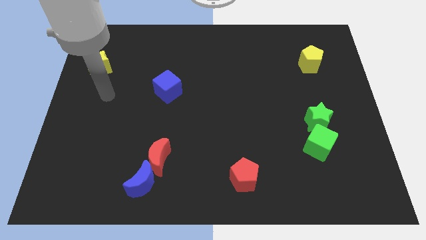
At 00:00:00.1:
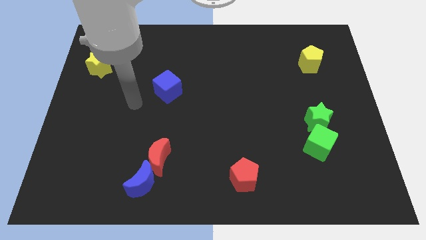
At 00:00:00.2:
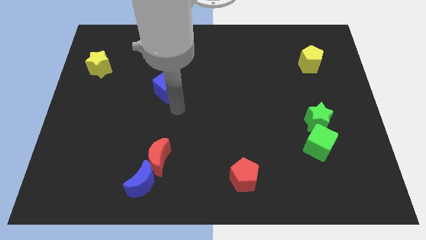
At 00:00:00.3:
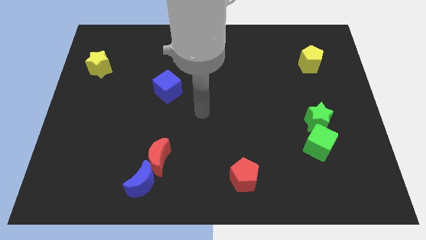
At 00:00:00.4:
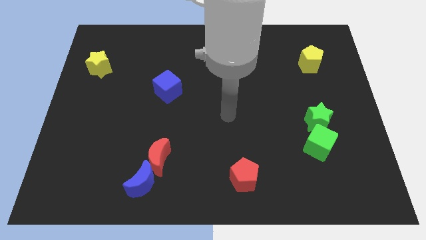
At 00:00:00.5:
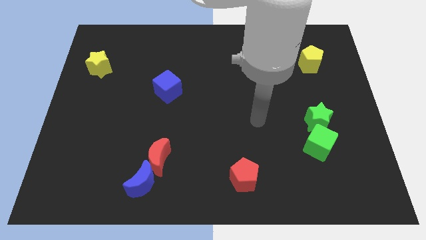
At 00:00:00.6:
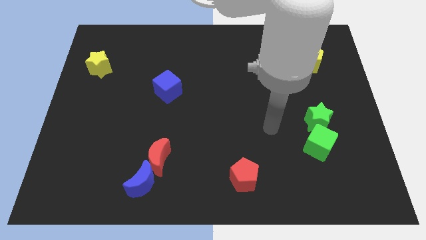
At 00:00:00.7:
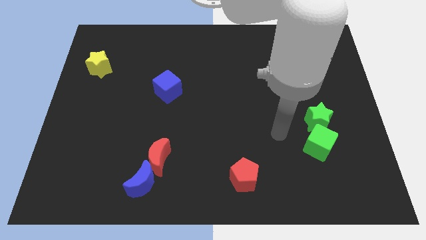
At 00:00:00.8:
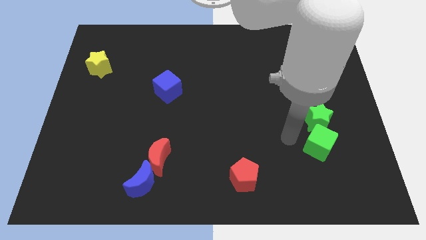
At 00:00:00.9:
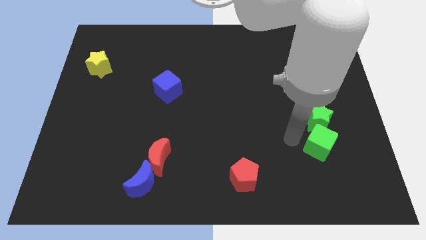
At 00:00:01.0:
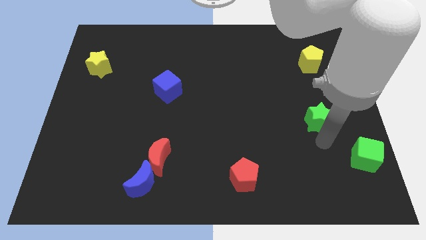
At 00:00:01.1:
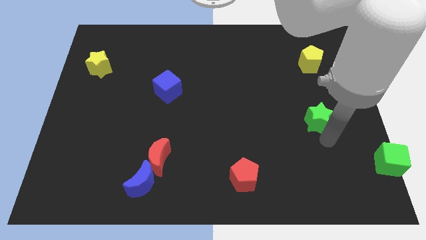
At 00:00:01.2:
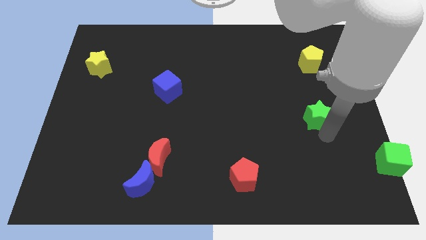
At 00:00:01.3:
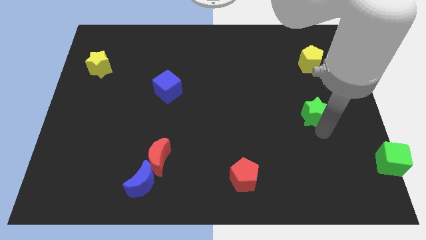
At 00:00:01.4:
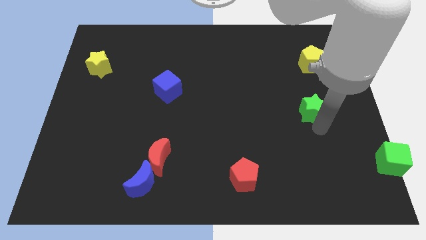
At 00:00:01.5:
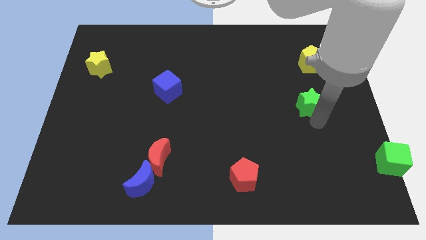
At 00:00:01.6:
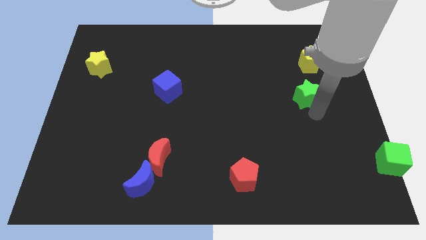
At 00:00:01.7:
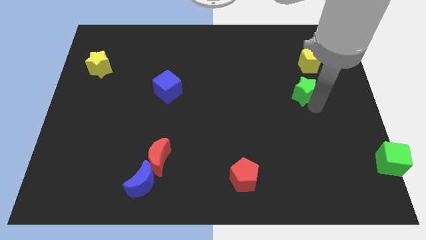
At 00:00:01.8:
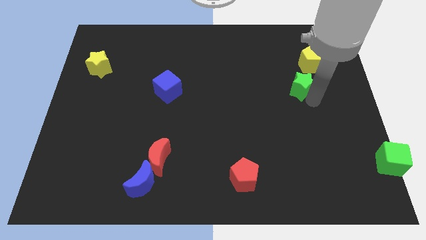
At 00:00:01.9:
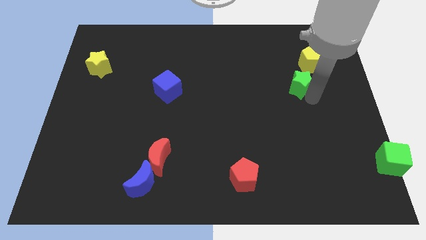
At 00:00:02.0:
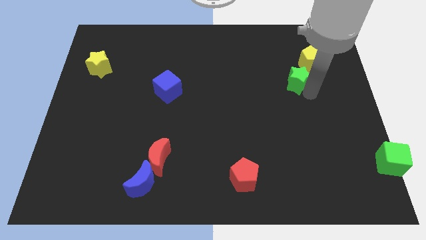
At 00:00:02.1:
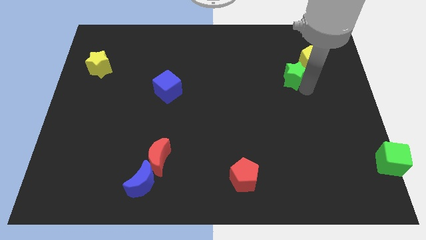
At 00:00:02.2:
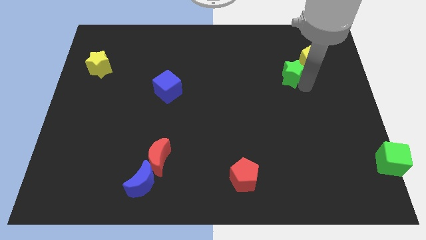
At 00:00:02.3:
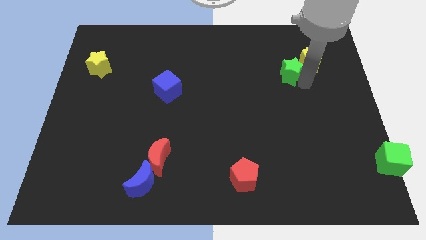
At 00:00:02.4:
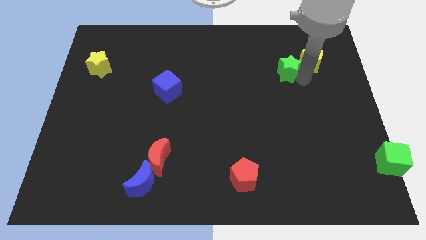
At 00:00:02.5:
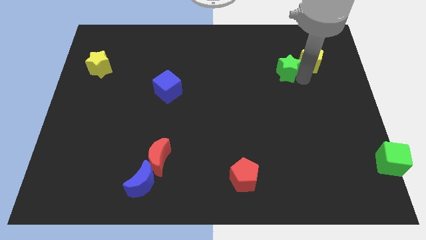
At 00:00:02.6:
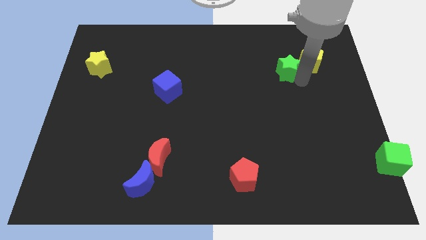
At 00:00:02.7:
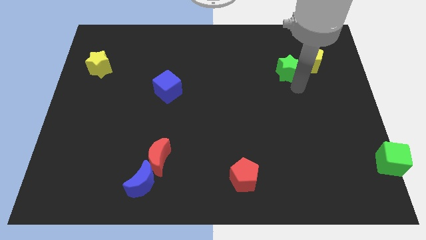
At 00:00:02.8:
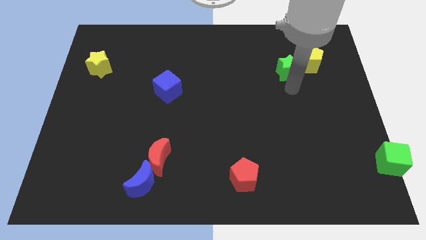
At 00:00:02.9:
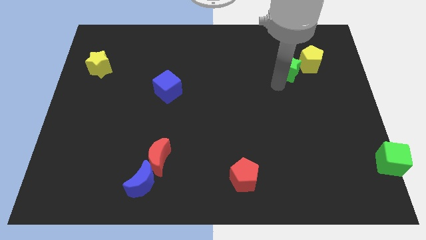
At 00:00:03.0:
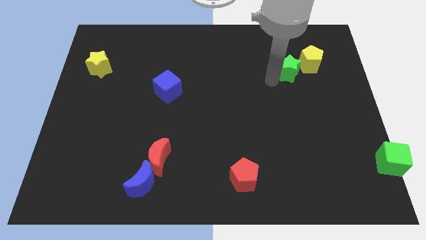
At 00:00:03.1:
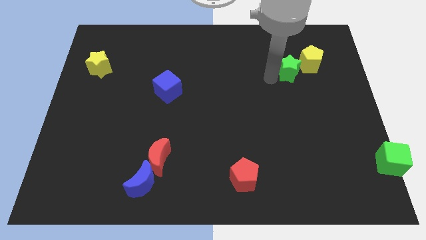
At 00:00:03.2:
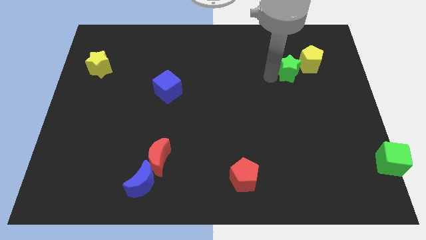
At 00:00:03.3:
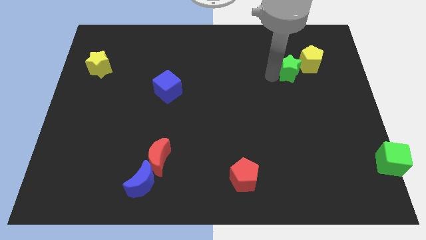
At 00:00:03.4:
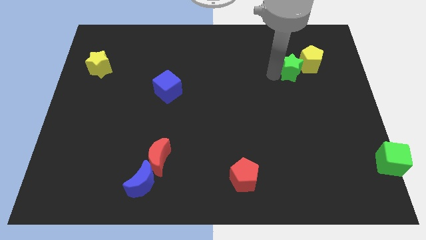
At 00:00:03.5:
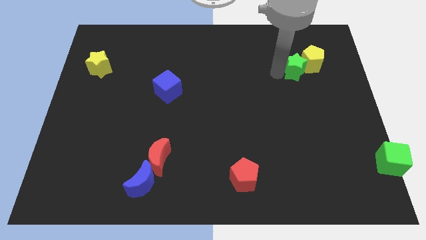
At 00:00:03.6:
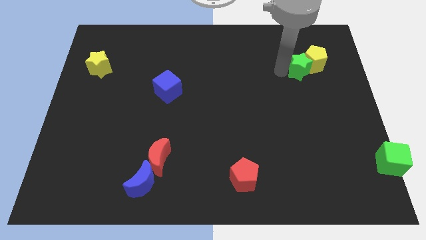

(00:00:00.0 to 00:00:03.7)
slide the green star next to the yellow pentagon

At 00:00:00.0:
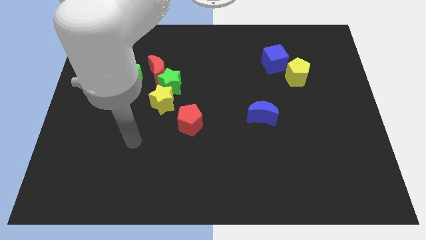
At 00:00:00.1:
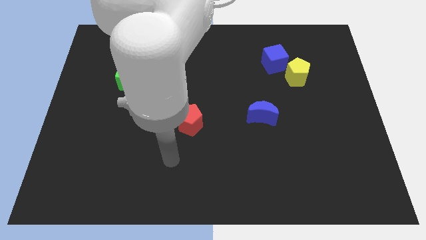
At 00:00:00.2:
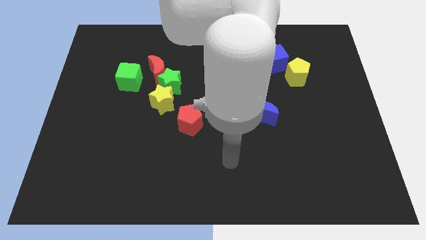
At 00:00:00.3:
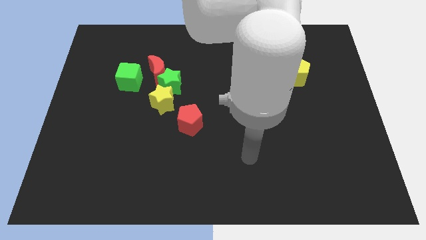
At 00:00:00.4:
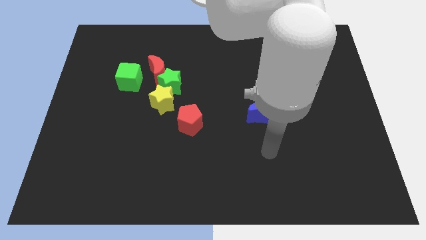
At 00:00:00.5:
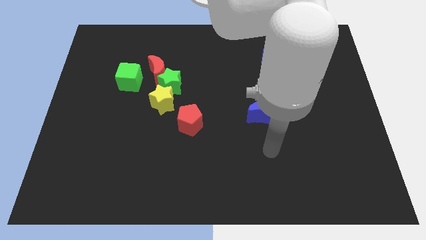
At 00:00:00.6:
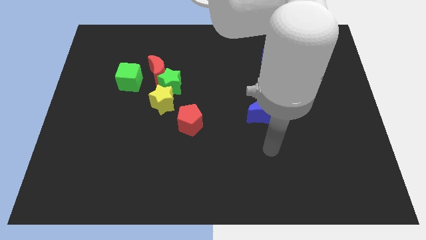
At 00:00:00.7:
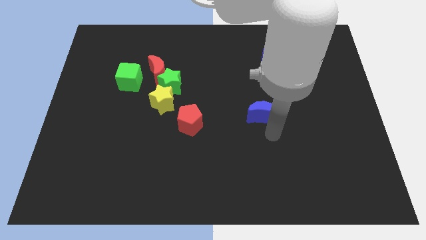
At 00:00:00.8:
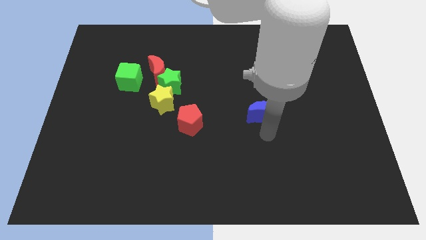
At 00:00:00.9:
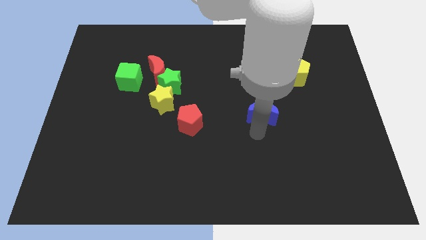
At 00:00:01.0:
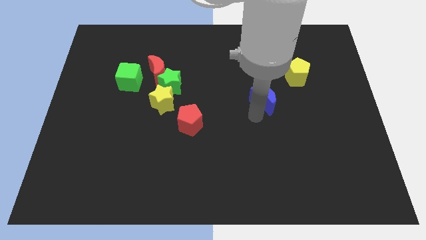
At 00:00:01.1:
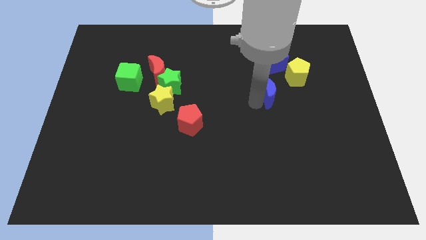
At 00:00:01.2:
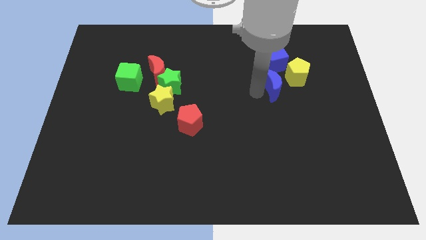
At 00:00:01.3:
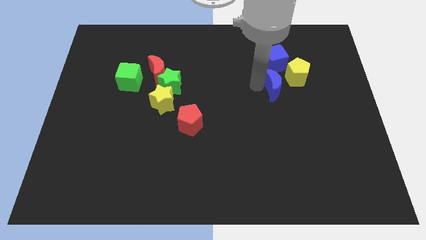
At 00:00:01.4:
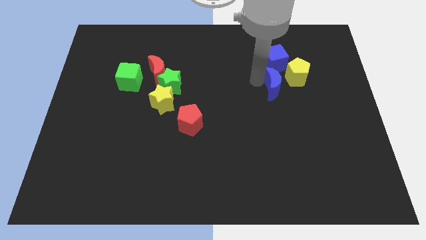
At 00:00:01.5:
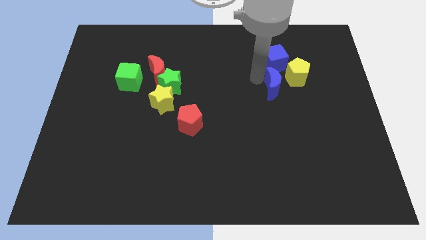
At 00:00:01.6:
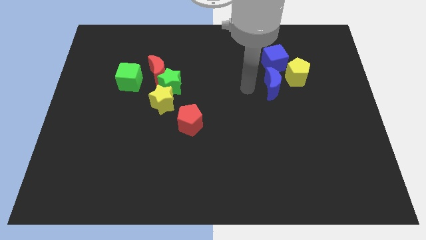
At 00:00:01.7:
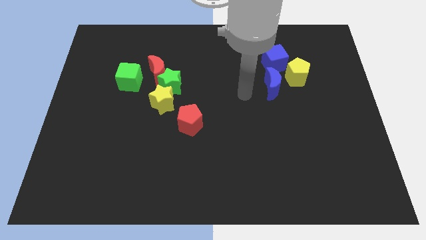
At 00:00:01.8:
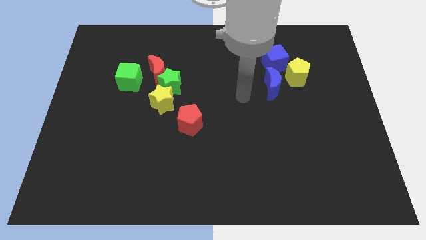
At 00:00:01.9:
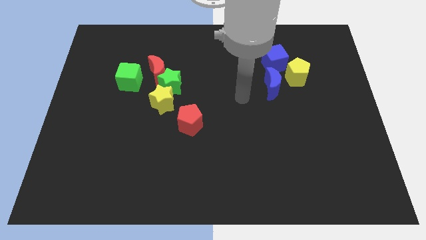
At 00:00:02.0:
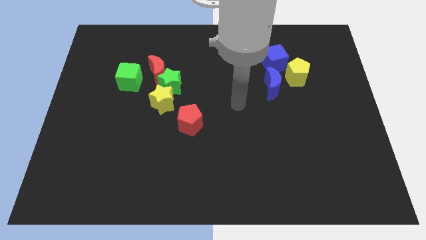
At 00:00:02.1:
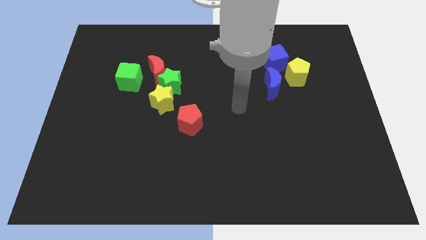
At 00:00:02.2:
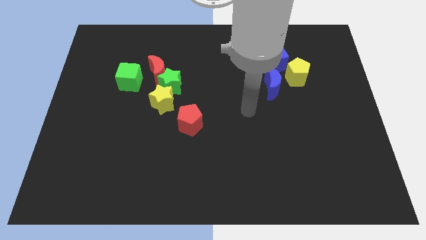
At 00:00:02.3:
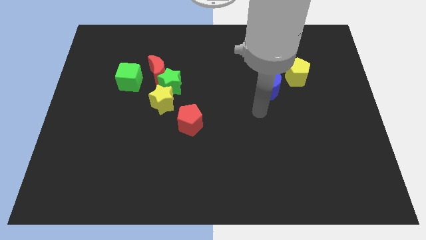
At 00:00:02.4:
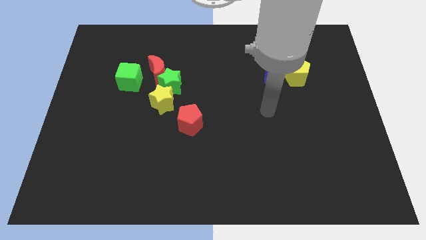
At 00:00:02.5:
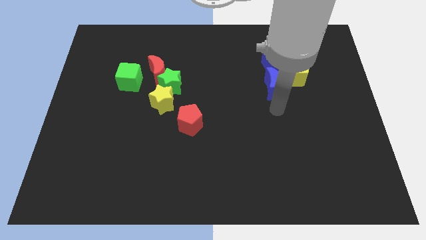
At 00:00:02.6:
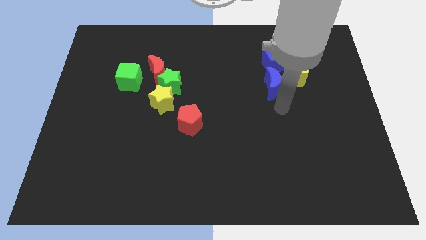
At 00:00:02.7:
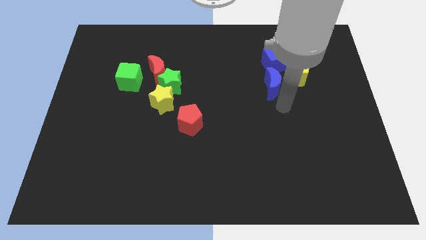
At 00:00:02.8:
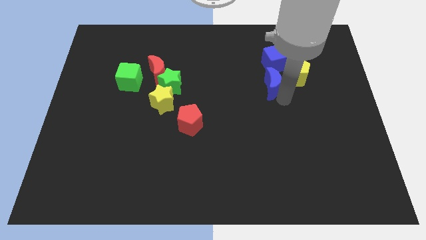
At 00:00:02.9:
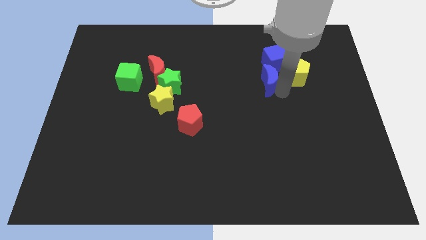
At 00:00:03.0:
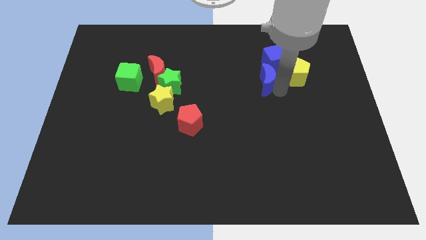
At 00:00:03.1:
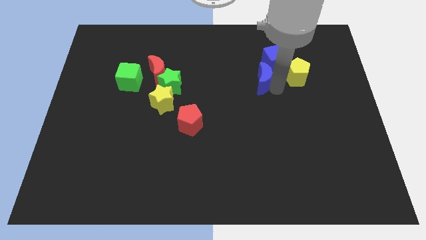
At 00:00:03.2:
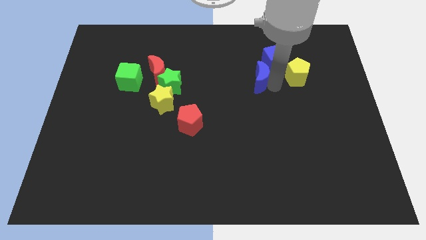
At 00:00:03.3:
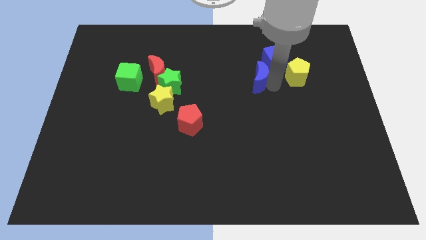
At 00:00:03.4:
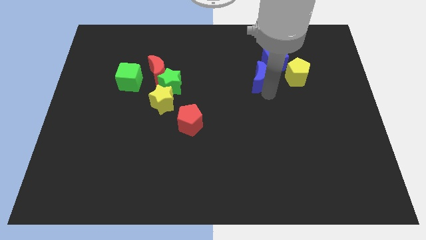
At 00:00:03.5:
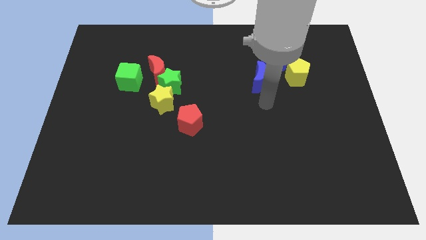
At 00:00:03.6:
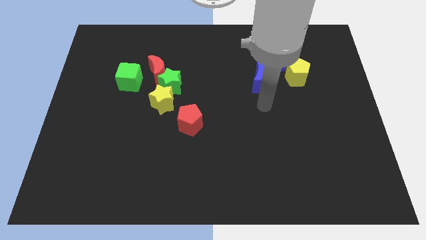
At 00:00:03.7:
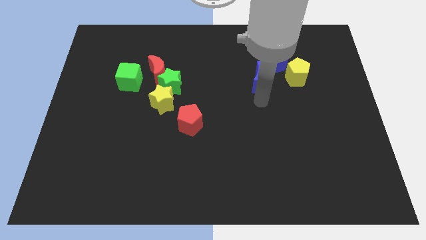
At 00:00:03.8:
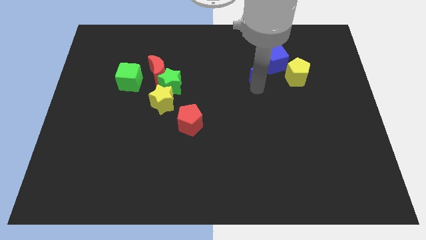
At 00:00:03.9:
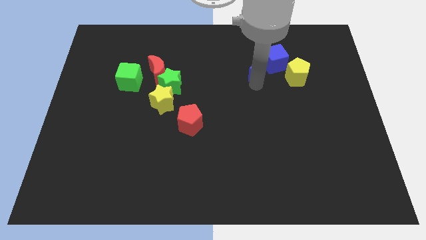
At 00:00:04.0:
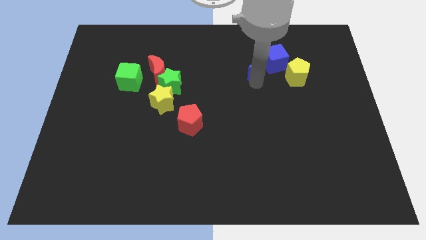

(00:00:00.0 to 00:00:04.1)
put the blue moon next to the blue cube

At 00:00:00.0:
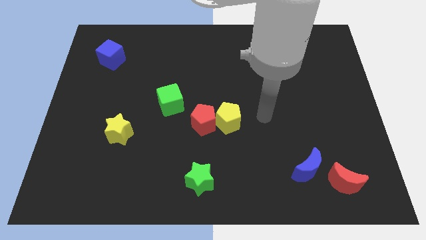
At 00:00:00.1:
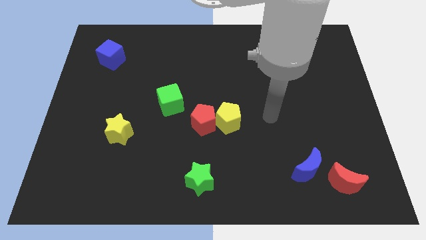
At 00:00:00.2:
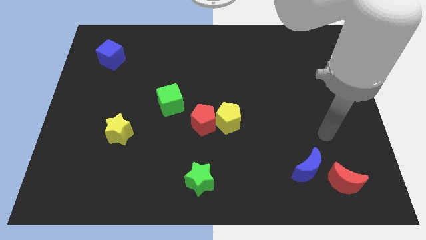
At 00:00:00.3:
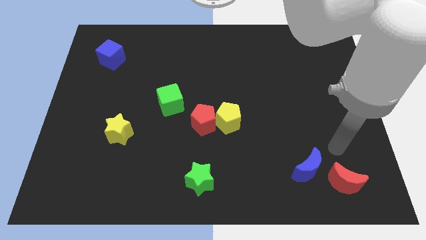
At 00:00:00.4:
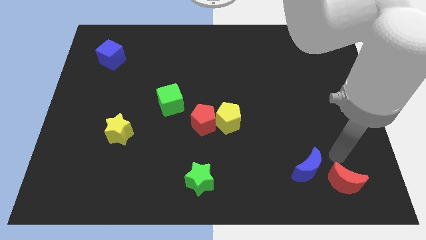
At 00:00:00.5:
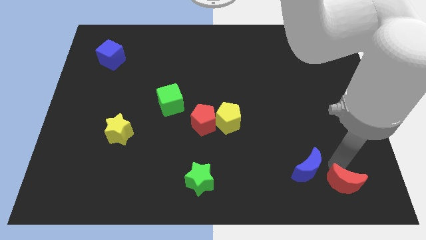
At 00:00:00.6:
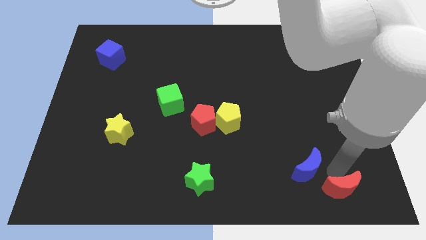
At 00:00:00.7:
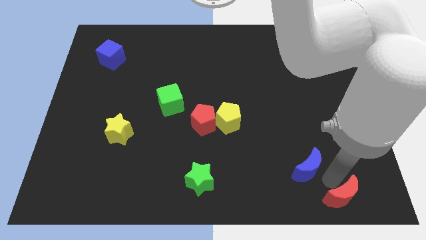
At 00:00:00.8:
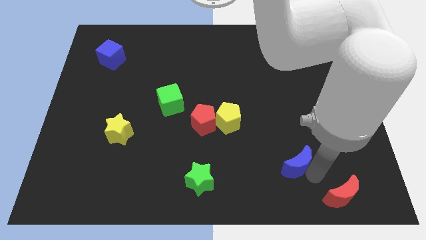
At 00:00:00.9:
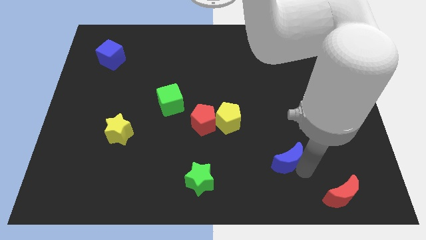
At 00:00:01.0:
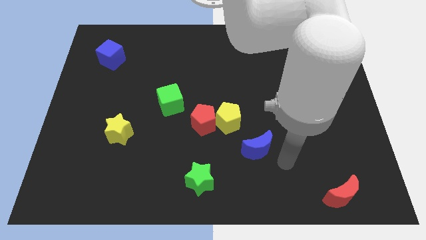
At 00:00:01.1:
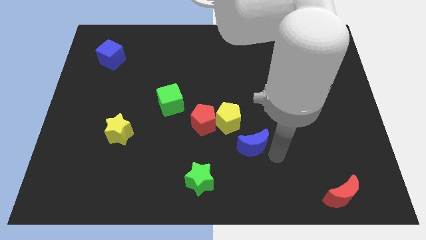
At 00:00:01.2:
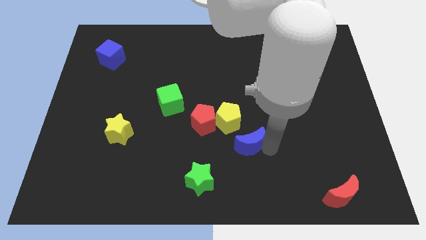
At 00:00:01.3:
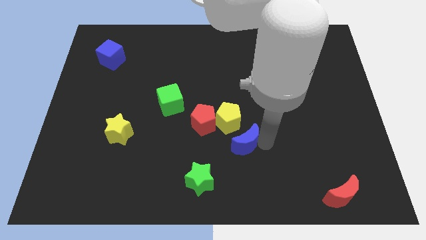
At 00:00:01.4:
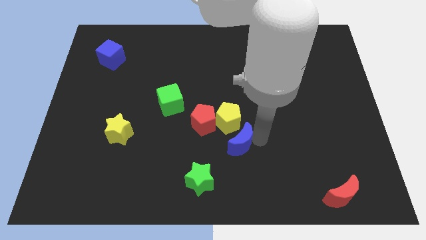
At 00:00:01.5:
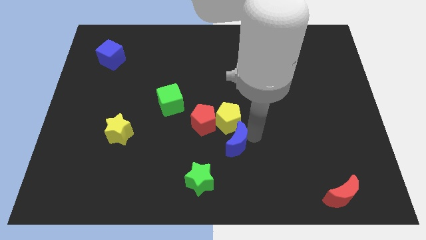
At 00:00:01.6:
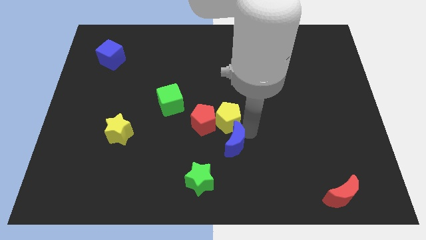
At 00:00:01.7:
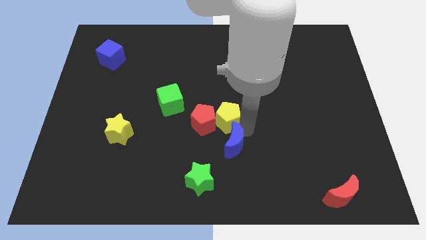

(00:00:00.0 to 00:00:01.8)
move the blue moon towards the yellow pentagon
